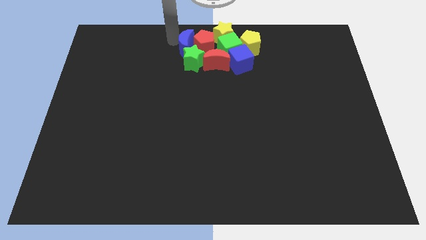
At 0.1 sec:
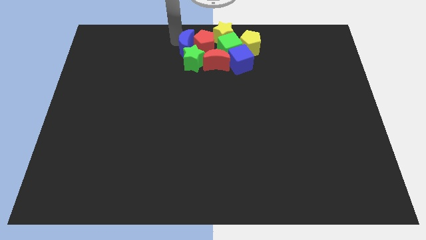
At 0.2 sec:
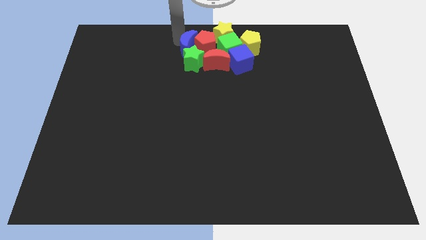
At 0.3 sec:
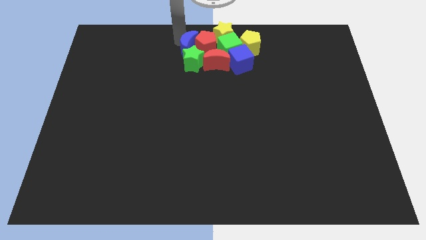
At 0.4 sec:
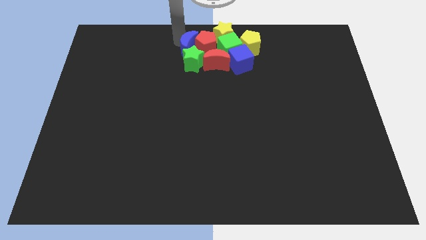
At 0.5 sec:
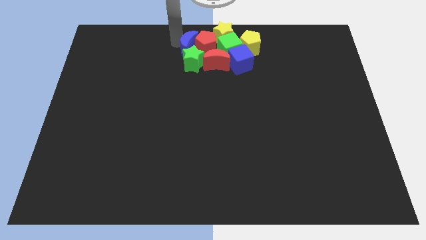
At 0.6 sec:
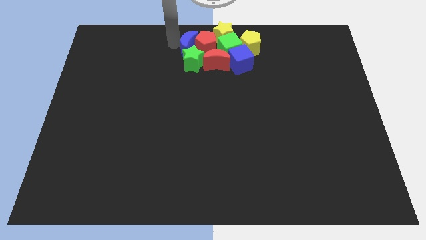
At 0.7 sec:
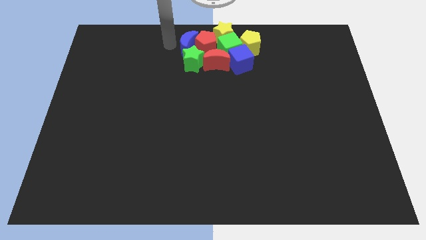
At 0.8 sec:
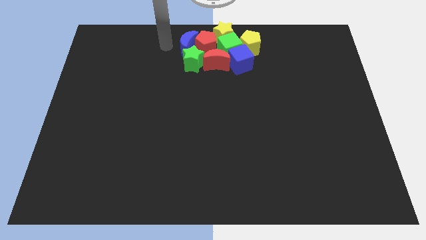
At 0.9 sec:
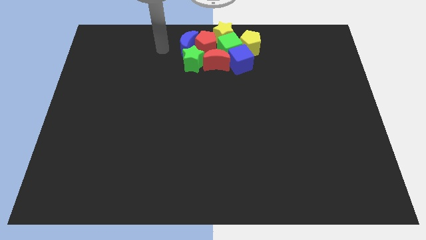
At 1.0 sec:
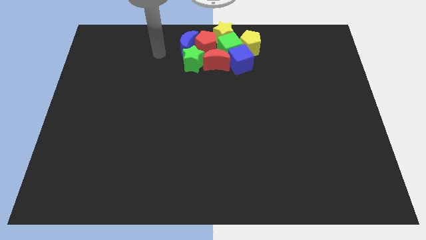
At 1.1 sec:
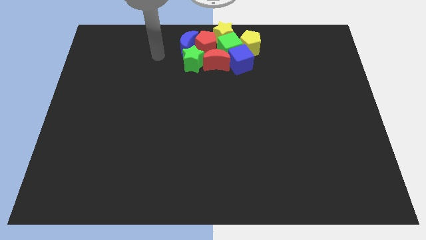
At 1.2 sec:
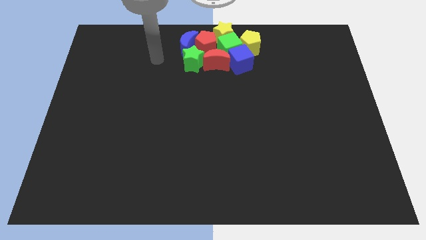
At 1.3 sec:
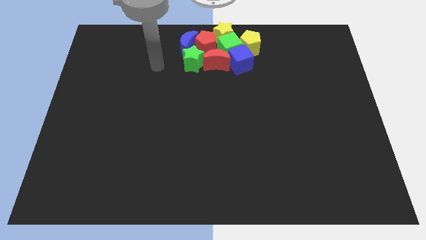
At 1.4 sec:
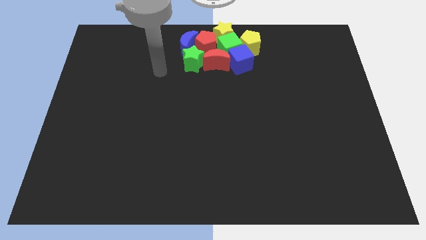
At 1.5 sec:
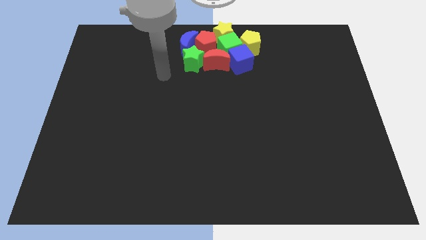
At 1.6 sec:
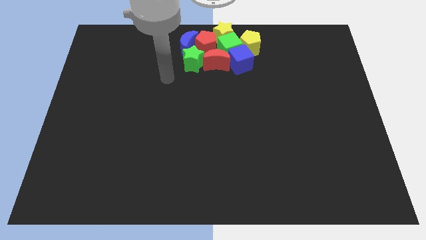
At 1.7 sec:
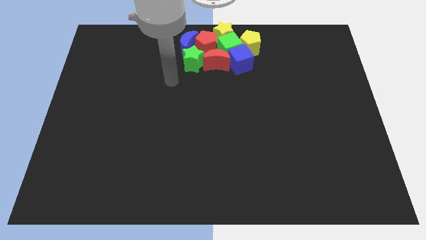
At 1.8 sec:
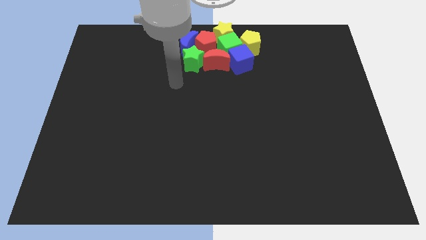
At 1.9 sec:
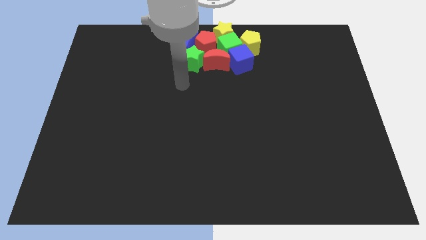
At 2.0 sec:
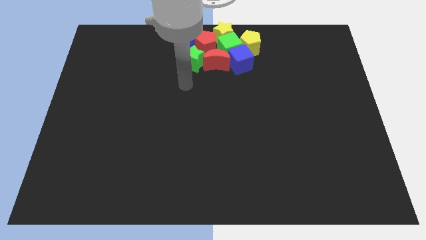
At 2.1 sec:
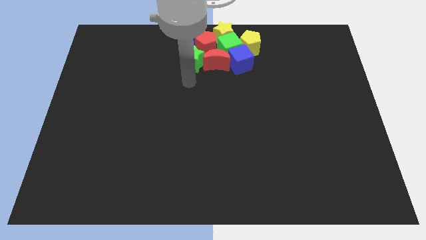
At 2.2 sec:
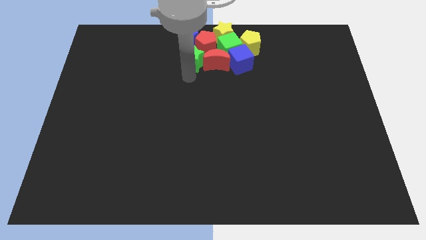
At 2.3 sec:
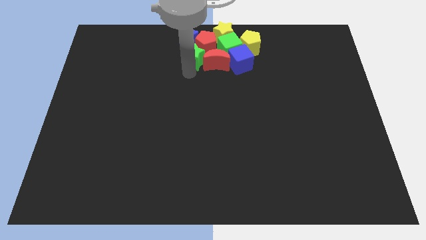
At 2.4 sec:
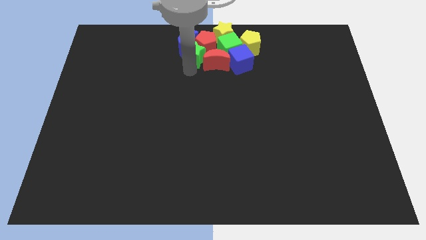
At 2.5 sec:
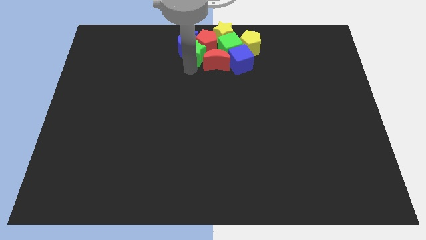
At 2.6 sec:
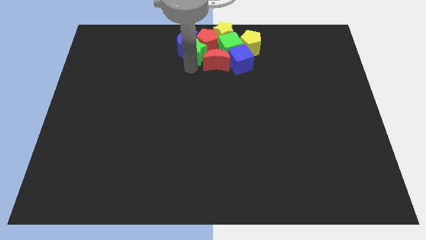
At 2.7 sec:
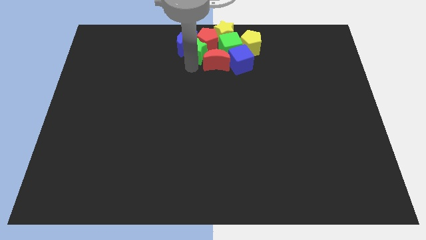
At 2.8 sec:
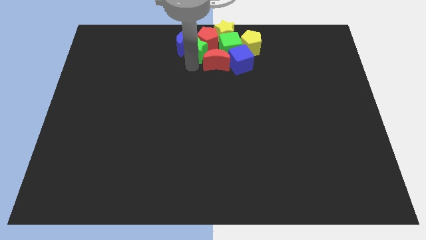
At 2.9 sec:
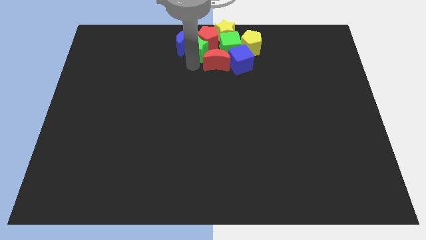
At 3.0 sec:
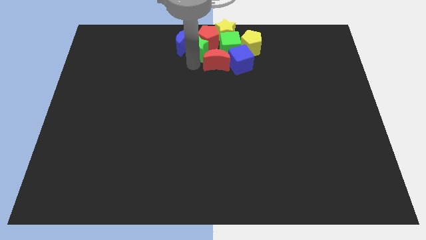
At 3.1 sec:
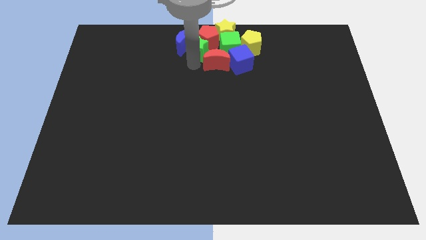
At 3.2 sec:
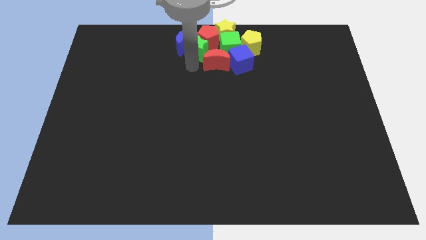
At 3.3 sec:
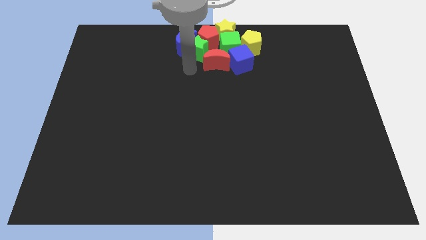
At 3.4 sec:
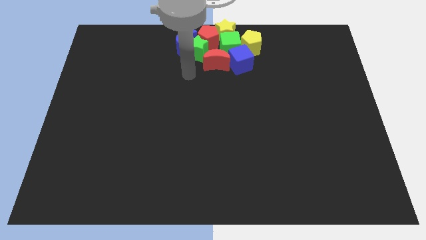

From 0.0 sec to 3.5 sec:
slide the green star into the red pentagon

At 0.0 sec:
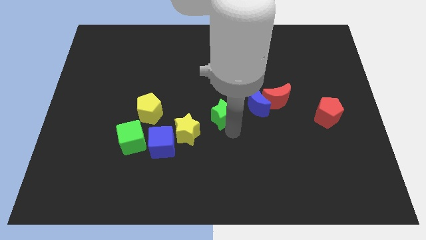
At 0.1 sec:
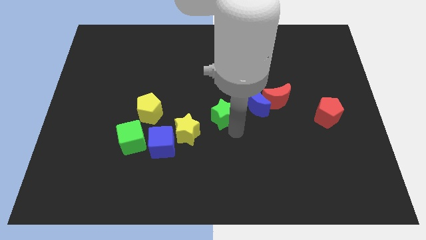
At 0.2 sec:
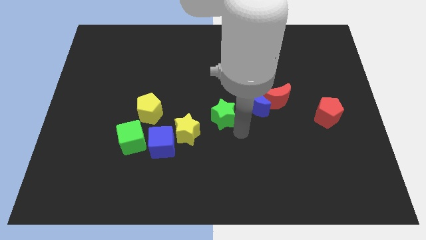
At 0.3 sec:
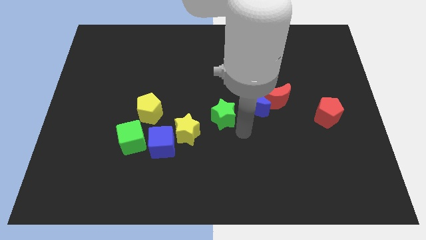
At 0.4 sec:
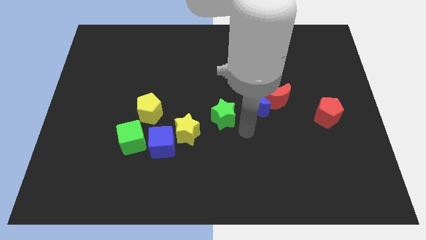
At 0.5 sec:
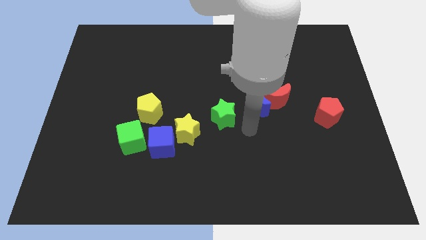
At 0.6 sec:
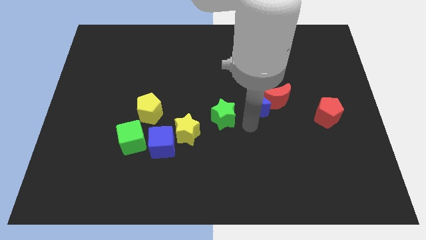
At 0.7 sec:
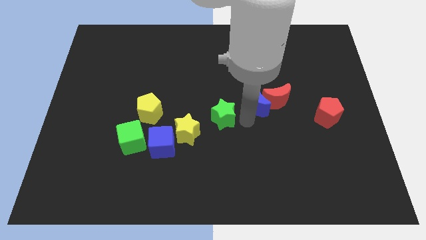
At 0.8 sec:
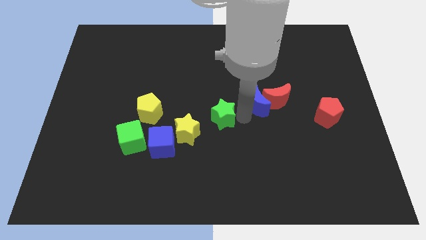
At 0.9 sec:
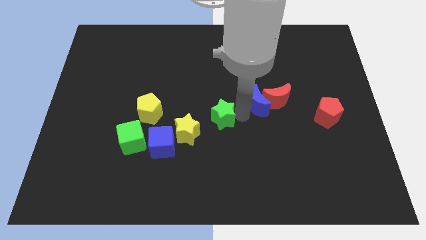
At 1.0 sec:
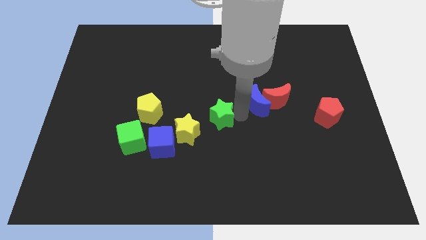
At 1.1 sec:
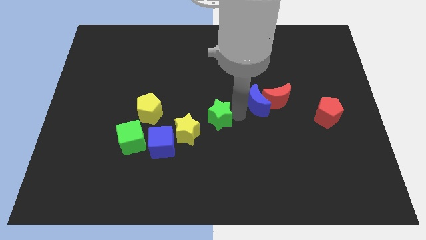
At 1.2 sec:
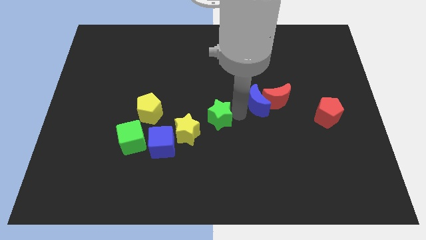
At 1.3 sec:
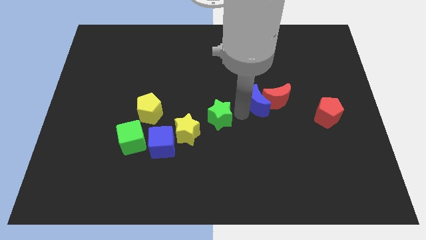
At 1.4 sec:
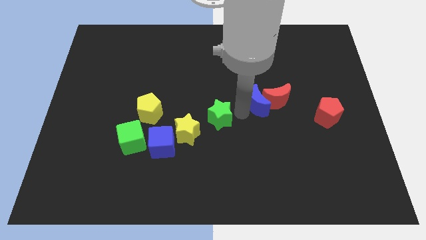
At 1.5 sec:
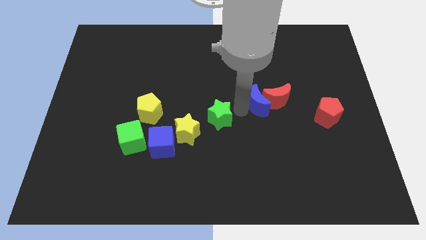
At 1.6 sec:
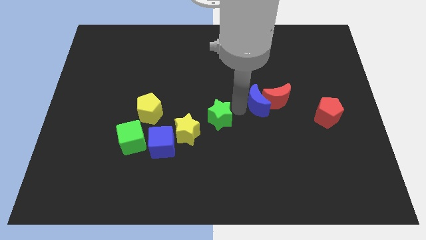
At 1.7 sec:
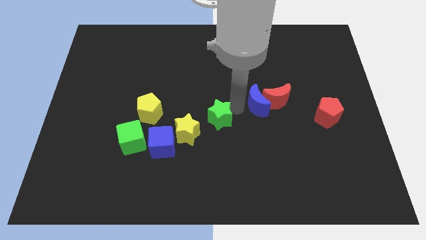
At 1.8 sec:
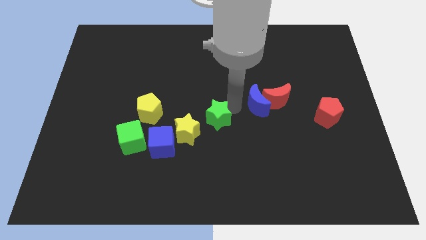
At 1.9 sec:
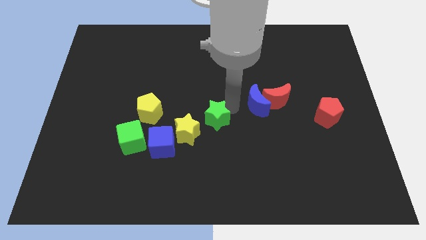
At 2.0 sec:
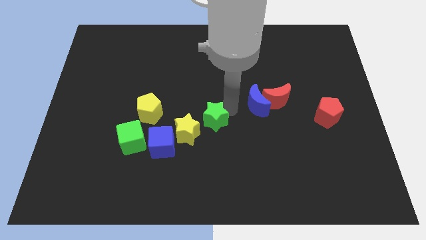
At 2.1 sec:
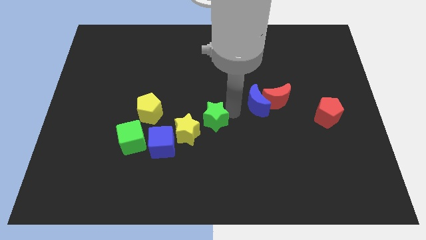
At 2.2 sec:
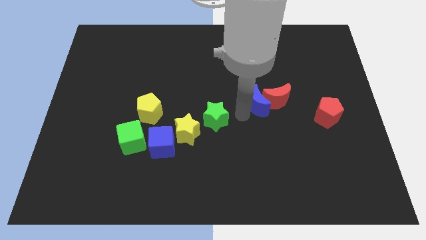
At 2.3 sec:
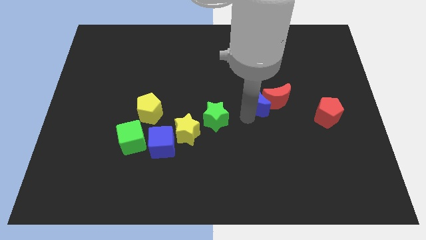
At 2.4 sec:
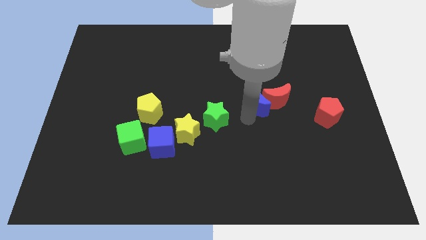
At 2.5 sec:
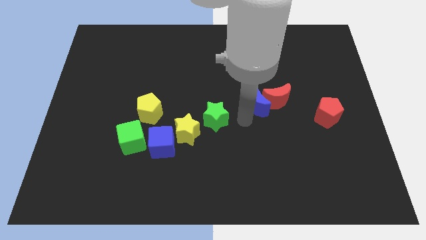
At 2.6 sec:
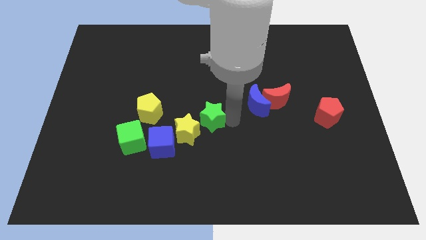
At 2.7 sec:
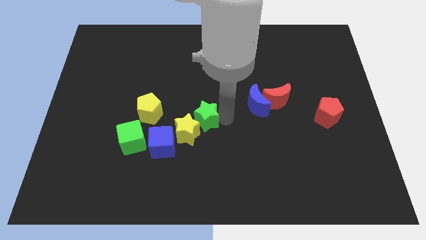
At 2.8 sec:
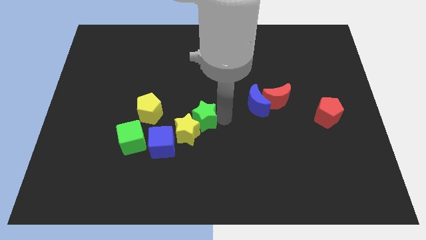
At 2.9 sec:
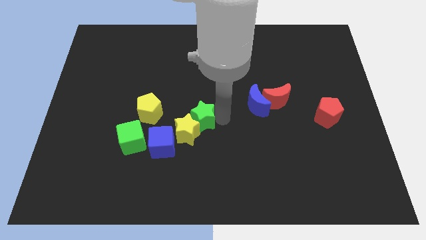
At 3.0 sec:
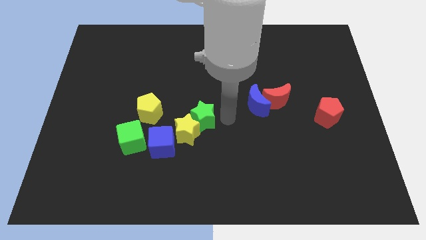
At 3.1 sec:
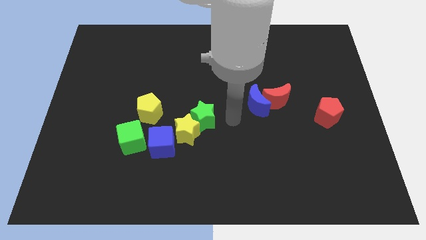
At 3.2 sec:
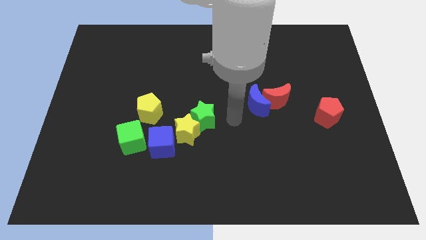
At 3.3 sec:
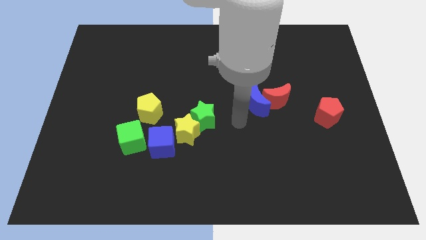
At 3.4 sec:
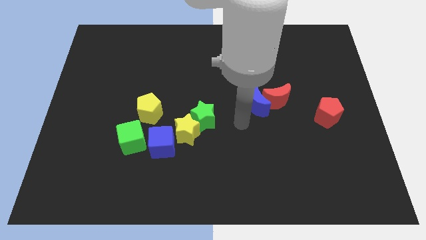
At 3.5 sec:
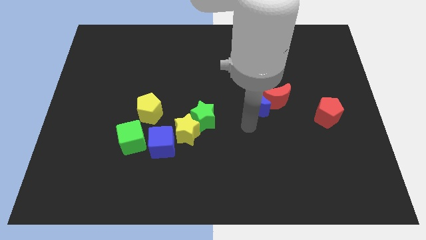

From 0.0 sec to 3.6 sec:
move the green star into the yellow star

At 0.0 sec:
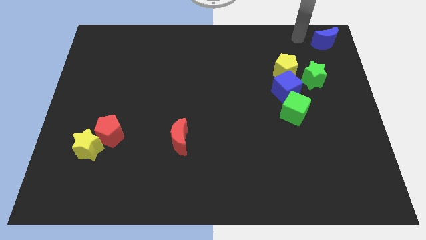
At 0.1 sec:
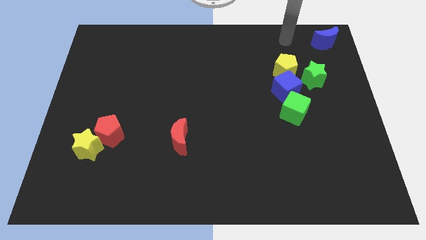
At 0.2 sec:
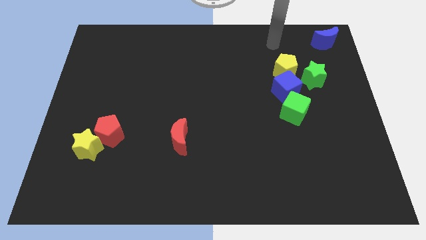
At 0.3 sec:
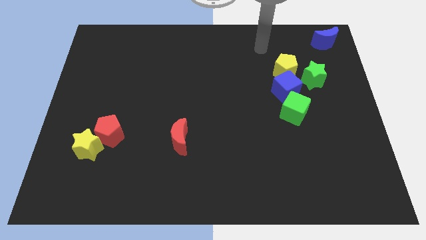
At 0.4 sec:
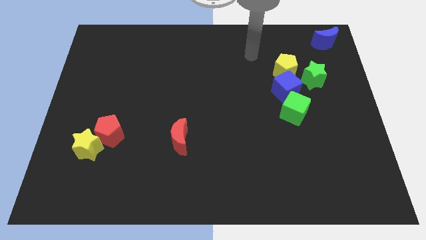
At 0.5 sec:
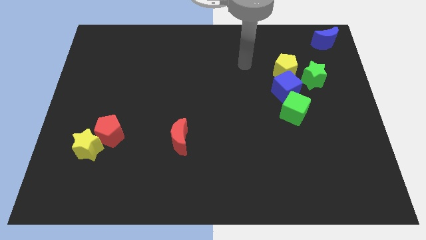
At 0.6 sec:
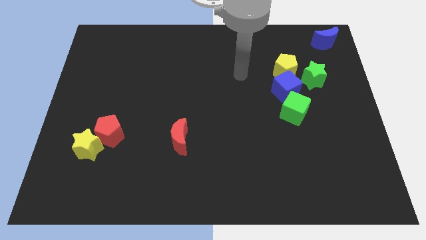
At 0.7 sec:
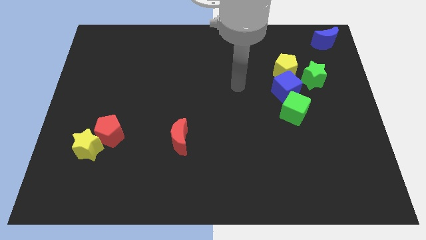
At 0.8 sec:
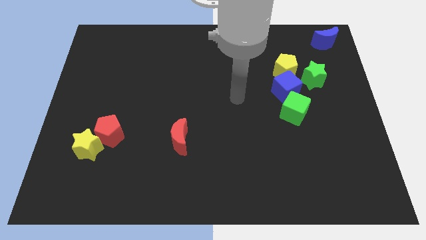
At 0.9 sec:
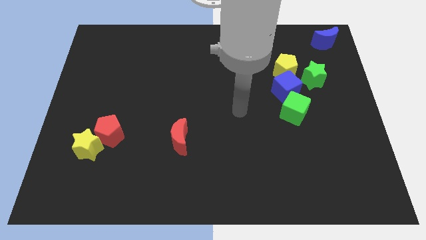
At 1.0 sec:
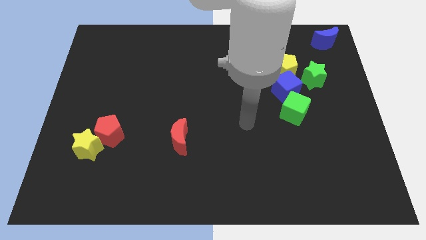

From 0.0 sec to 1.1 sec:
move your arm to the center of the board

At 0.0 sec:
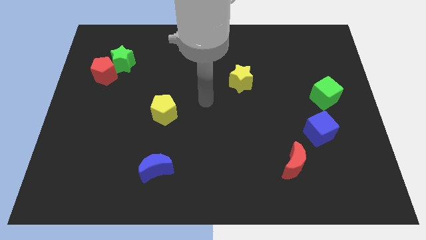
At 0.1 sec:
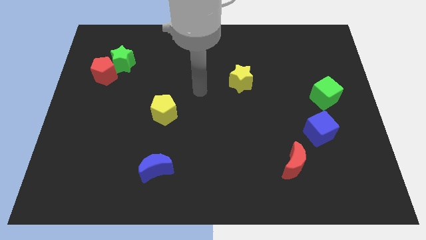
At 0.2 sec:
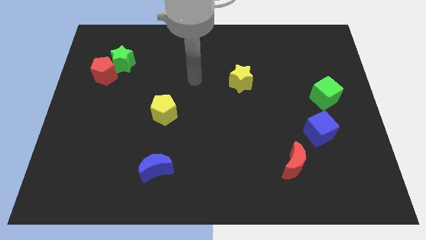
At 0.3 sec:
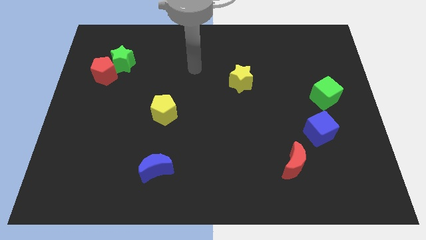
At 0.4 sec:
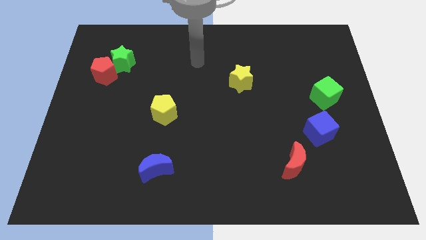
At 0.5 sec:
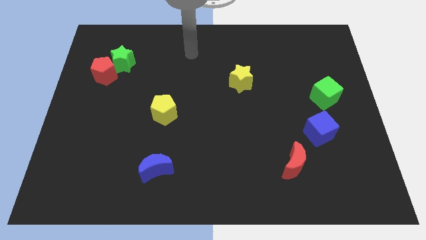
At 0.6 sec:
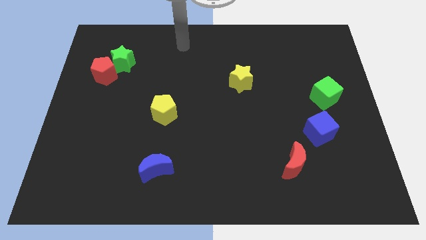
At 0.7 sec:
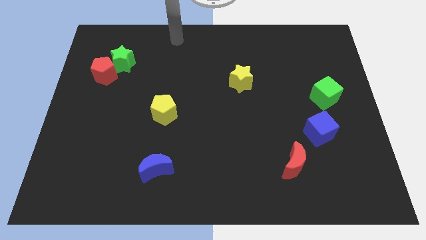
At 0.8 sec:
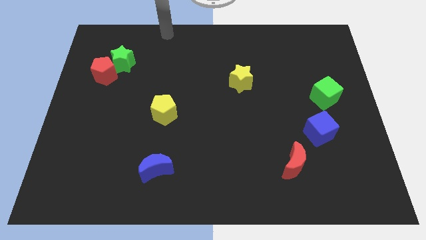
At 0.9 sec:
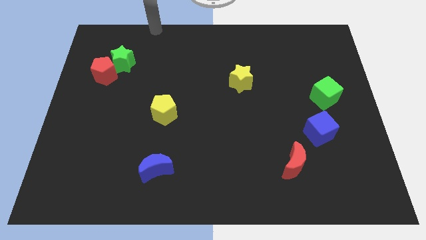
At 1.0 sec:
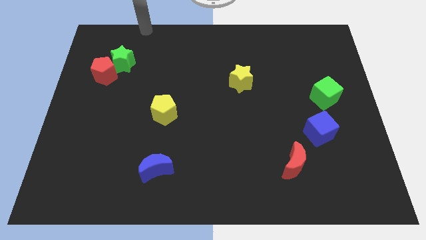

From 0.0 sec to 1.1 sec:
move your hand away from the center of the board
